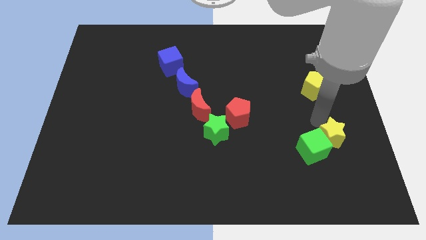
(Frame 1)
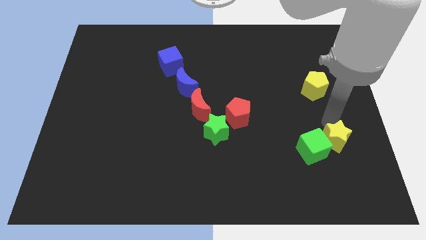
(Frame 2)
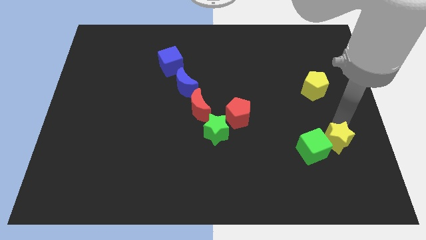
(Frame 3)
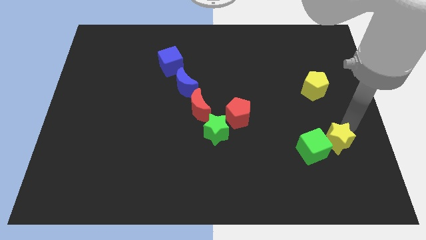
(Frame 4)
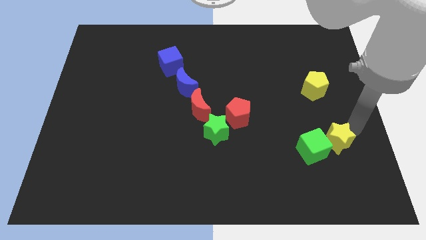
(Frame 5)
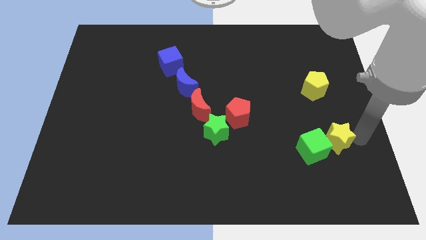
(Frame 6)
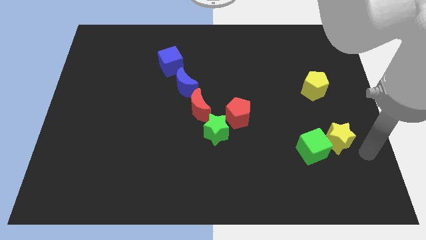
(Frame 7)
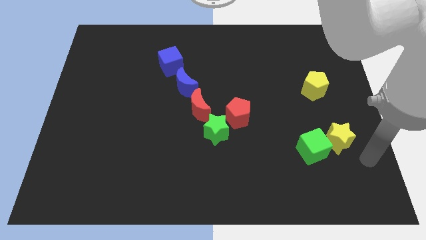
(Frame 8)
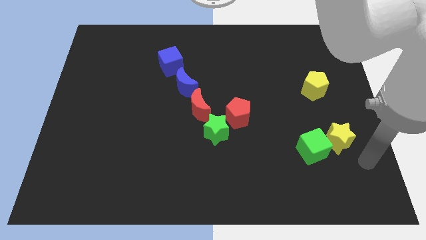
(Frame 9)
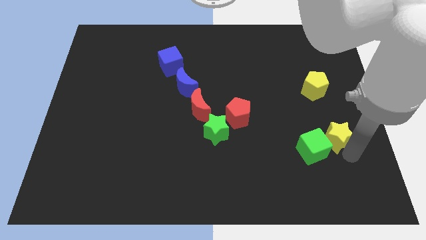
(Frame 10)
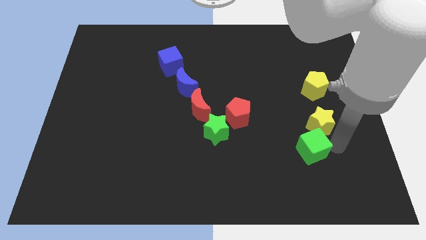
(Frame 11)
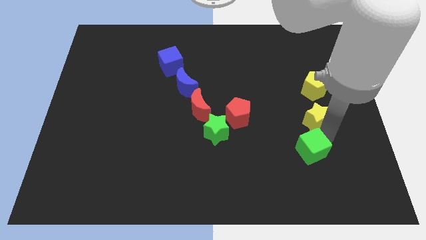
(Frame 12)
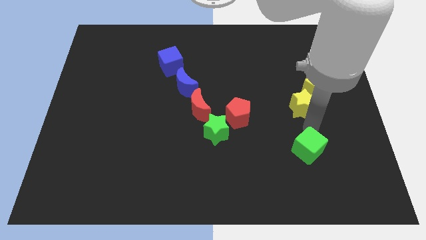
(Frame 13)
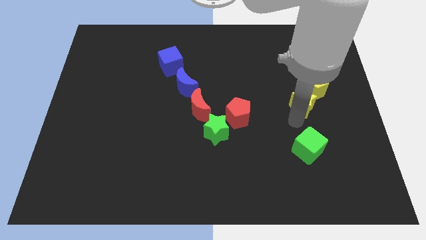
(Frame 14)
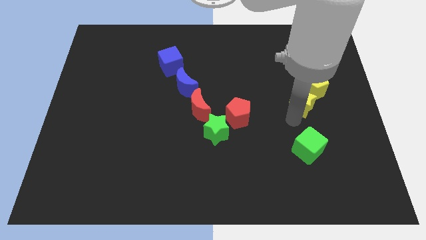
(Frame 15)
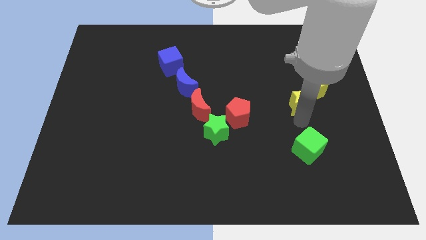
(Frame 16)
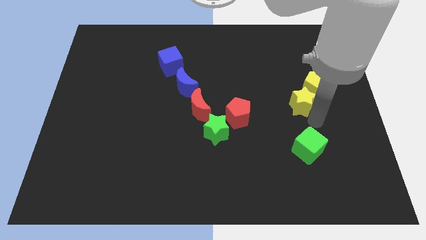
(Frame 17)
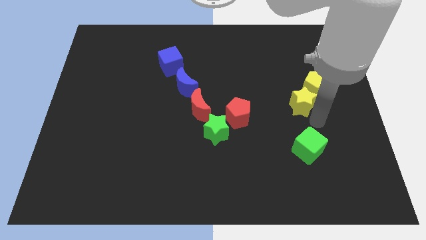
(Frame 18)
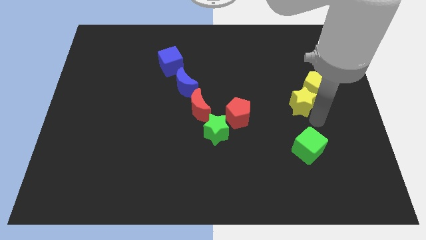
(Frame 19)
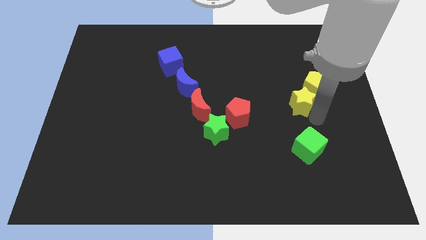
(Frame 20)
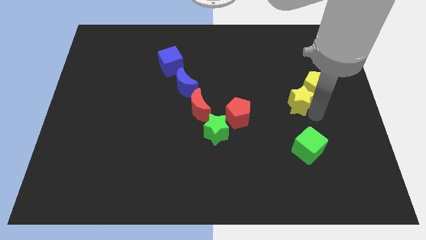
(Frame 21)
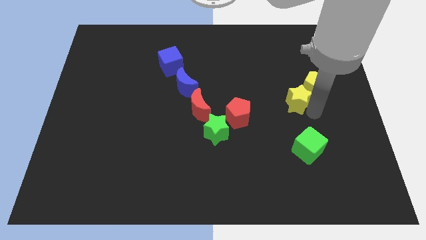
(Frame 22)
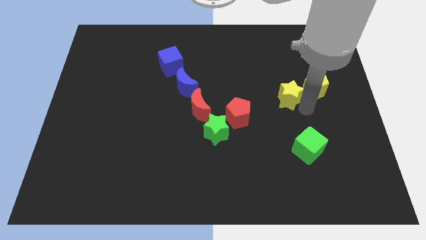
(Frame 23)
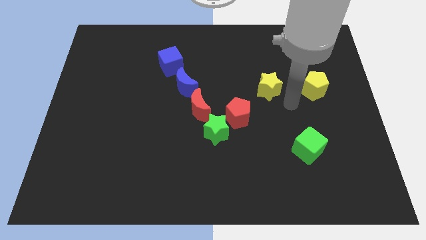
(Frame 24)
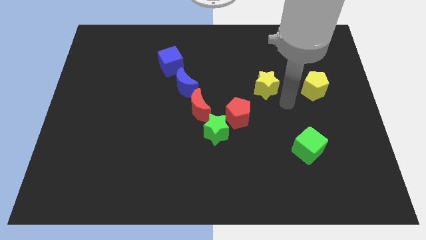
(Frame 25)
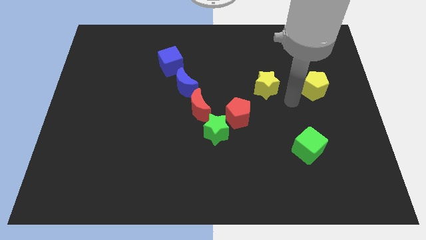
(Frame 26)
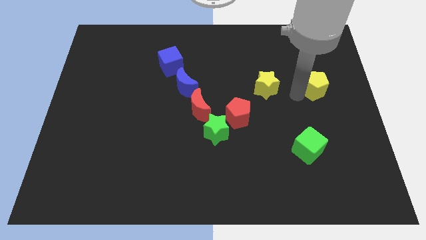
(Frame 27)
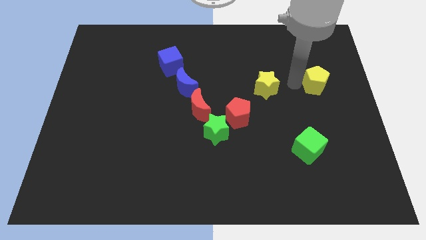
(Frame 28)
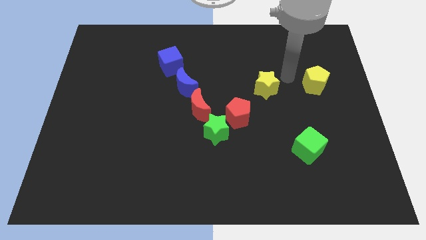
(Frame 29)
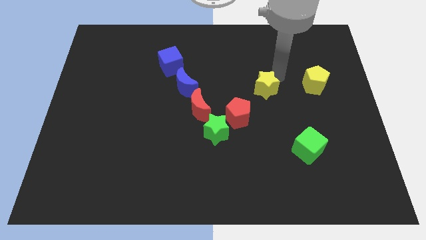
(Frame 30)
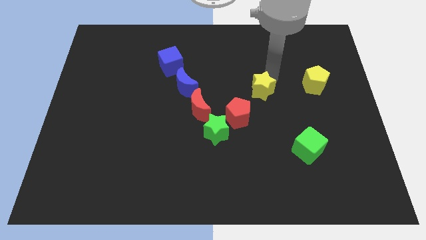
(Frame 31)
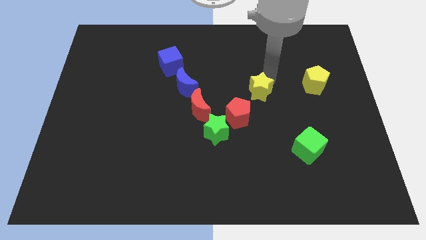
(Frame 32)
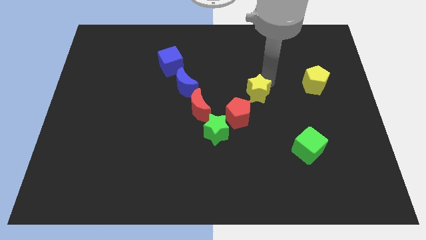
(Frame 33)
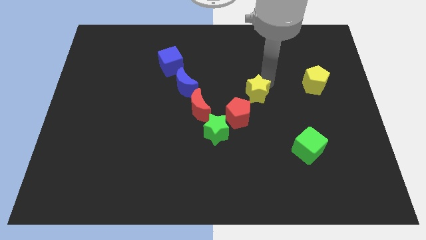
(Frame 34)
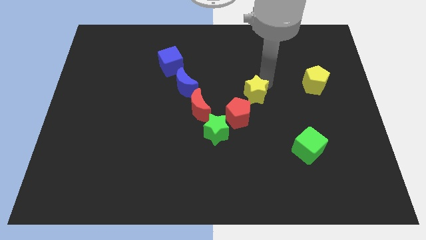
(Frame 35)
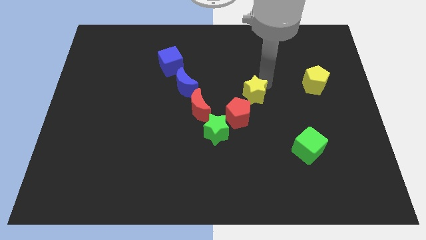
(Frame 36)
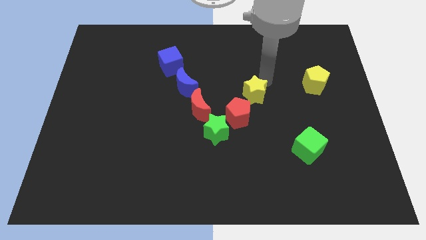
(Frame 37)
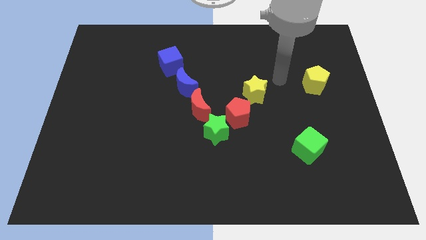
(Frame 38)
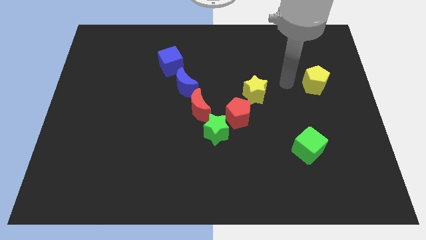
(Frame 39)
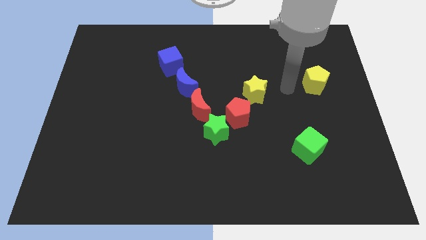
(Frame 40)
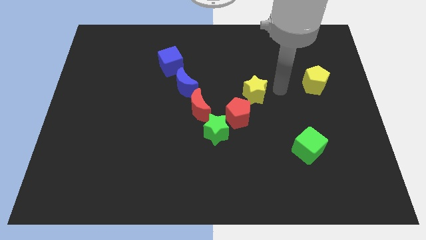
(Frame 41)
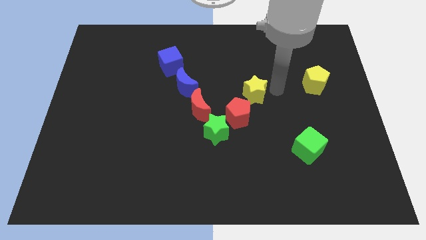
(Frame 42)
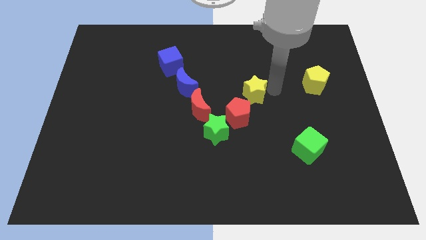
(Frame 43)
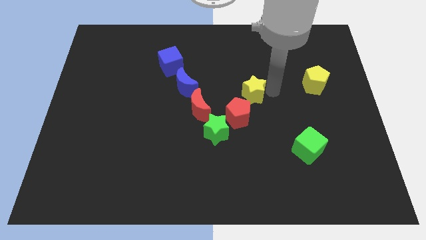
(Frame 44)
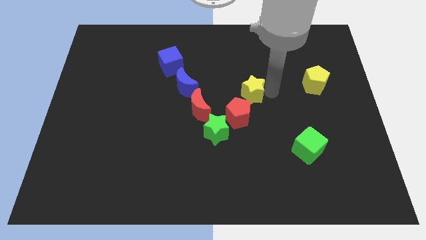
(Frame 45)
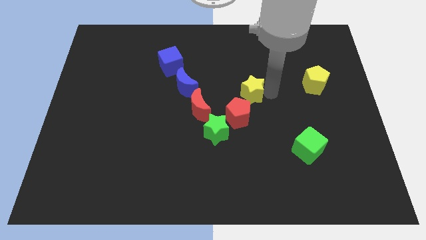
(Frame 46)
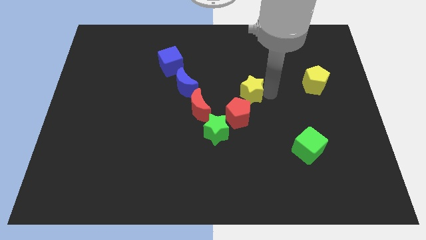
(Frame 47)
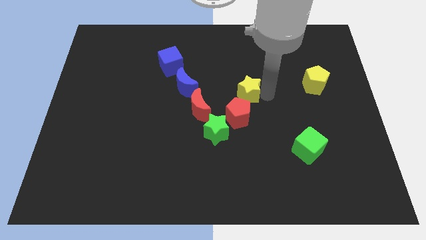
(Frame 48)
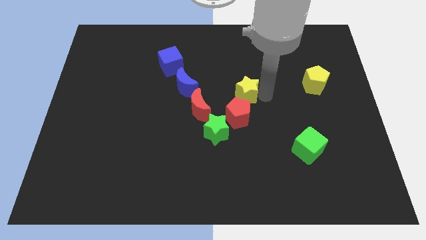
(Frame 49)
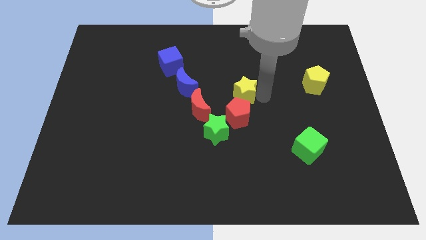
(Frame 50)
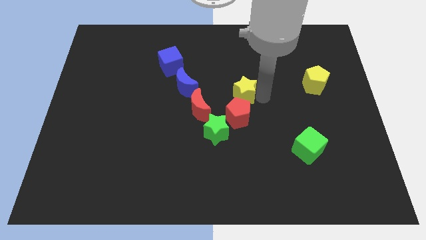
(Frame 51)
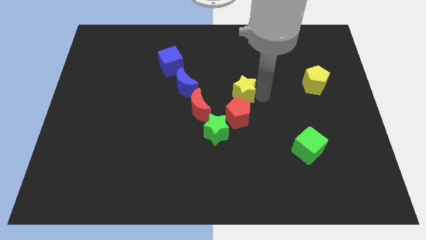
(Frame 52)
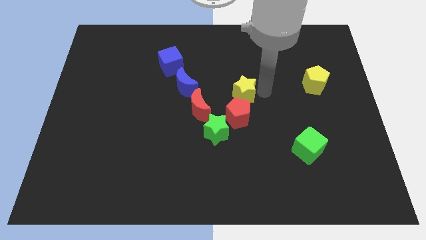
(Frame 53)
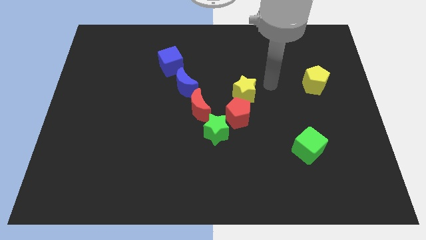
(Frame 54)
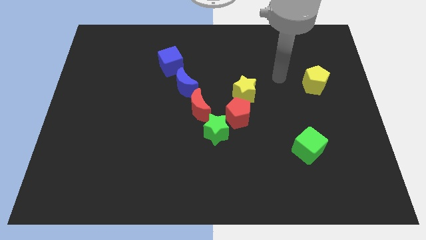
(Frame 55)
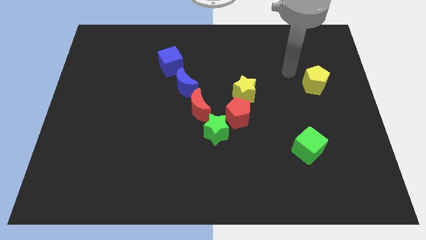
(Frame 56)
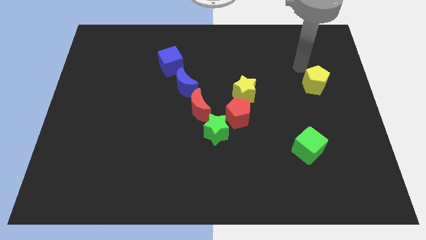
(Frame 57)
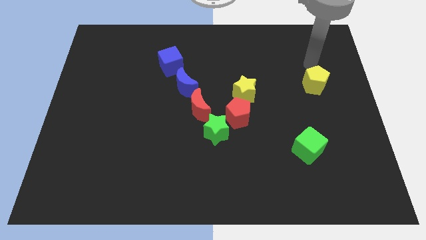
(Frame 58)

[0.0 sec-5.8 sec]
push the yellow star to the top of the red pentagon

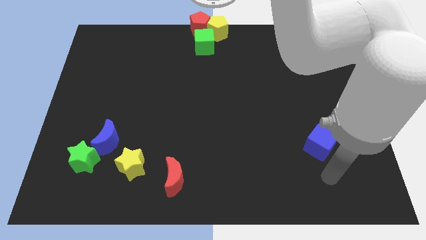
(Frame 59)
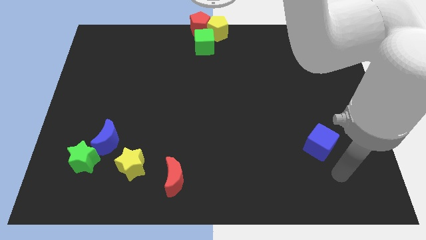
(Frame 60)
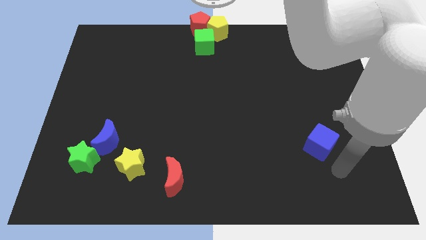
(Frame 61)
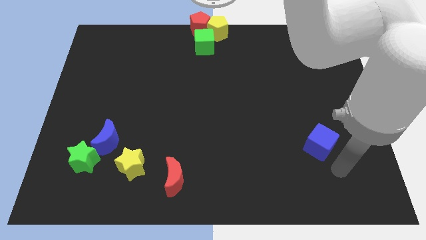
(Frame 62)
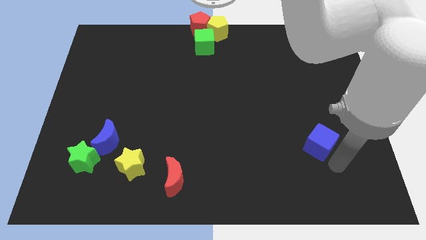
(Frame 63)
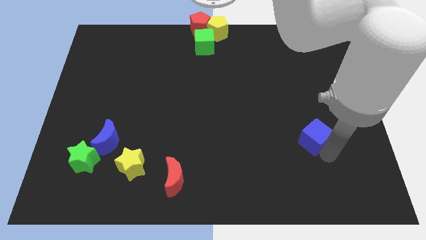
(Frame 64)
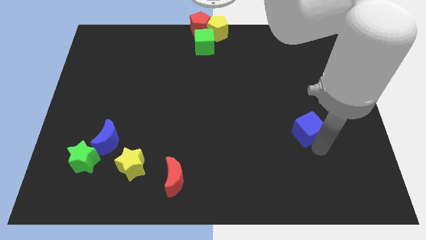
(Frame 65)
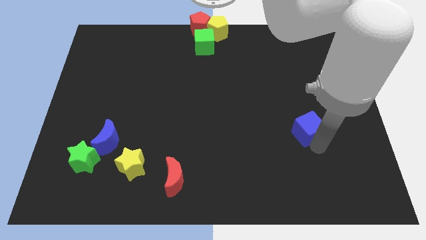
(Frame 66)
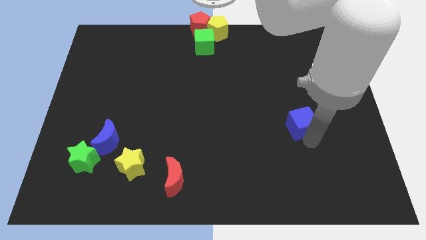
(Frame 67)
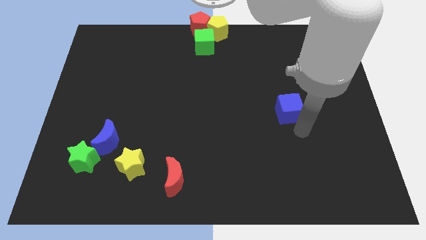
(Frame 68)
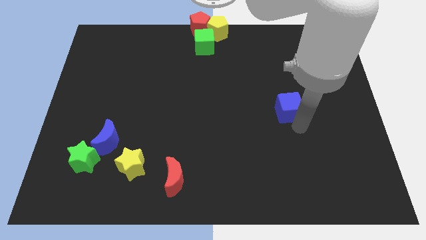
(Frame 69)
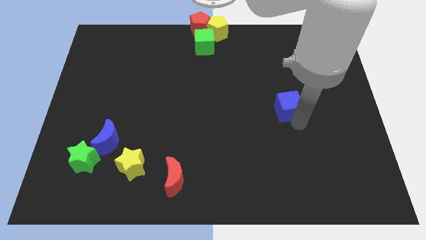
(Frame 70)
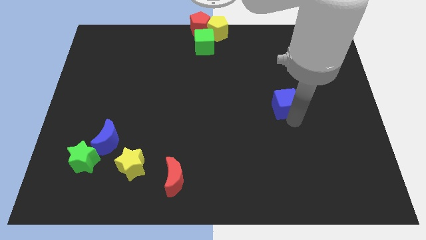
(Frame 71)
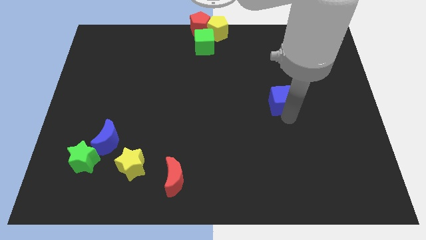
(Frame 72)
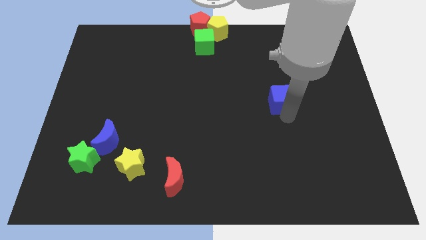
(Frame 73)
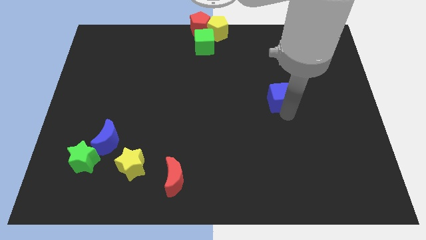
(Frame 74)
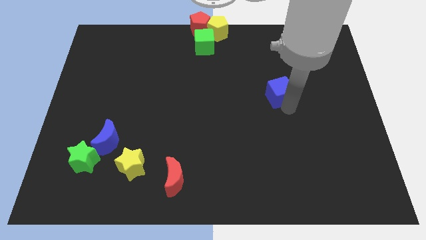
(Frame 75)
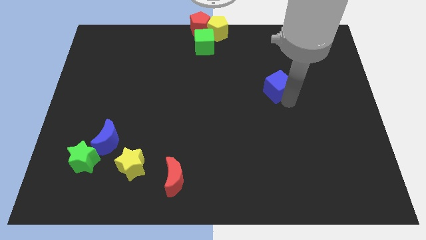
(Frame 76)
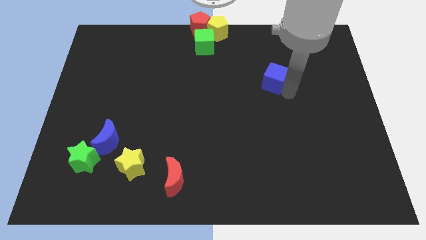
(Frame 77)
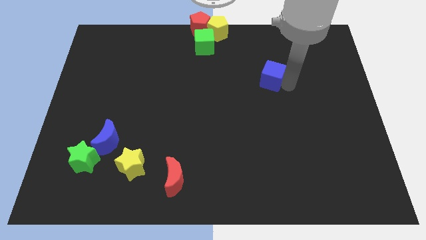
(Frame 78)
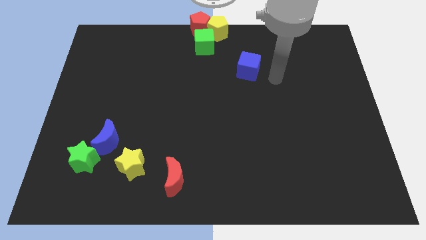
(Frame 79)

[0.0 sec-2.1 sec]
move the blue cube diagonally to the green cube

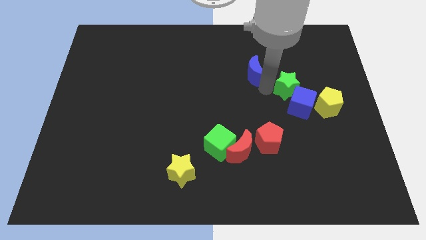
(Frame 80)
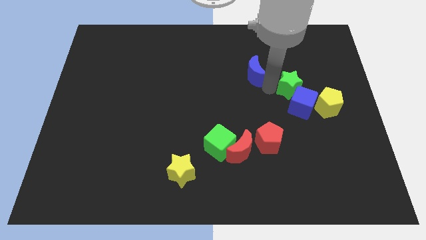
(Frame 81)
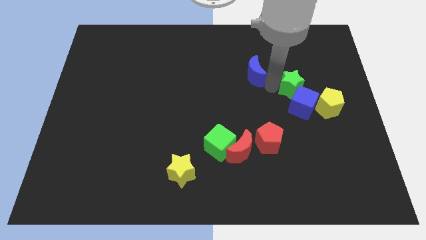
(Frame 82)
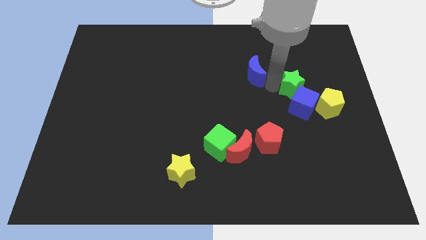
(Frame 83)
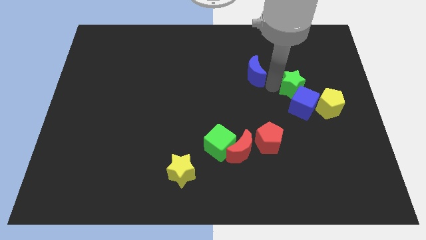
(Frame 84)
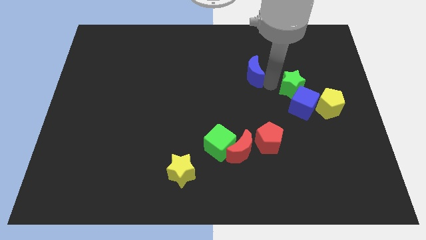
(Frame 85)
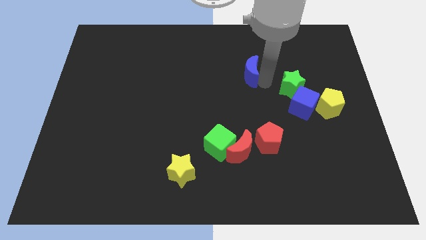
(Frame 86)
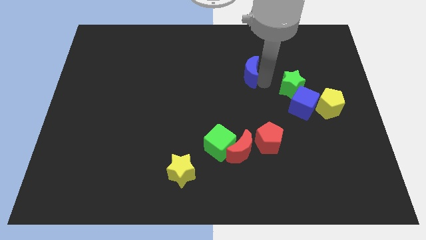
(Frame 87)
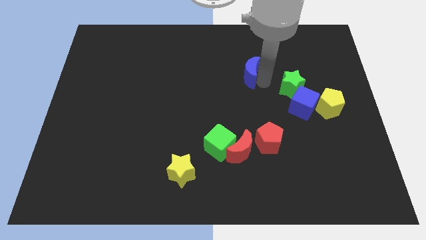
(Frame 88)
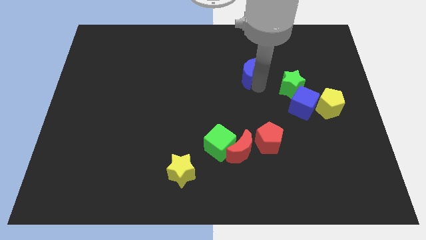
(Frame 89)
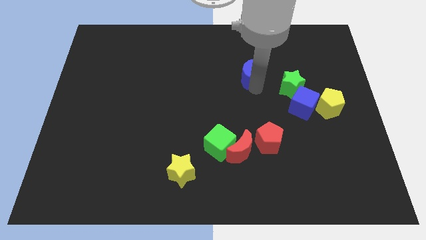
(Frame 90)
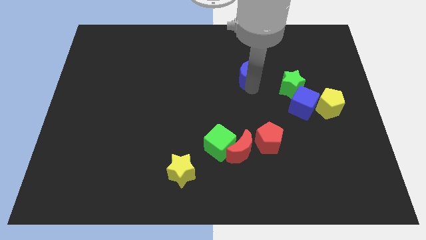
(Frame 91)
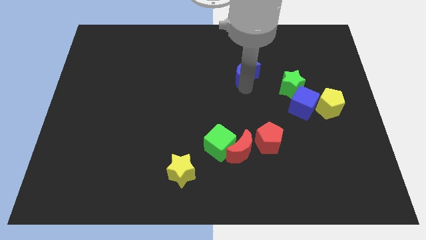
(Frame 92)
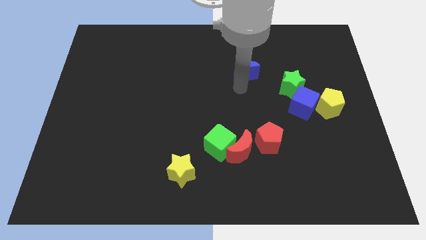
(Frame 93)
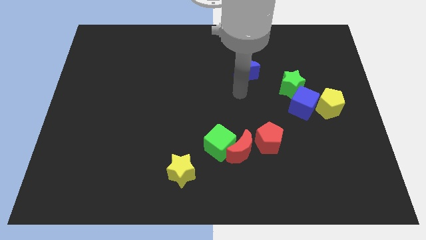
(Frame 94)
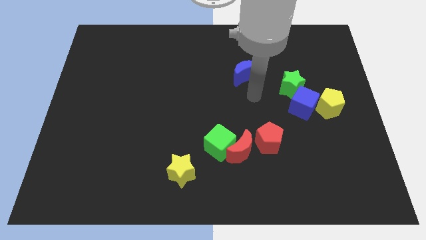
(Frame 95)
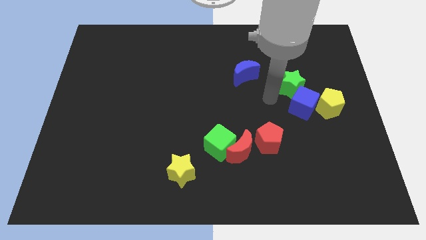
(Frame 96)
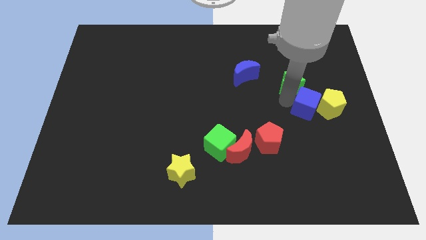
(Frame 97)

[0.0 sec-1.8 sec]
move the blue moon slightly to the left
